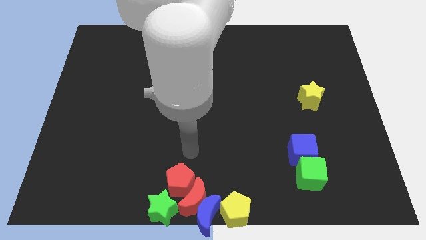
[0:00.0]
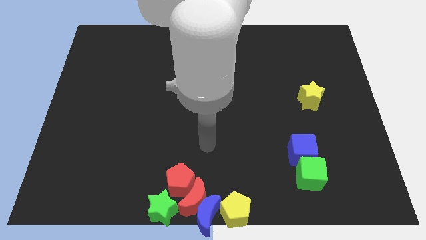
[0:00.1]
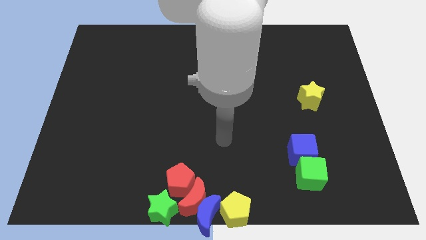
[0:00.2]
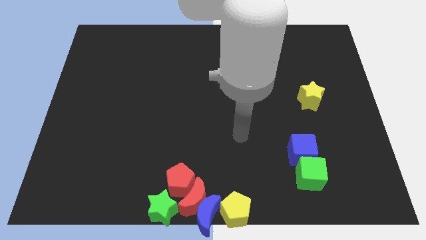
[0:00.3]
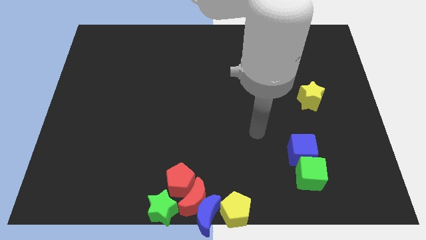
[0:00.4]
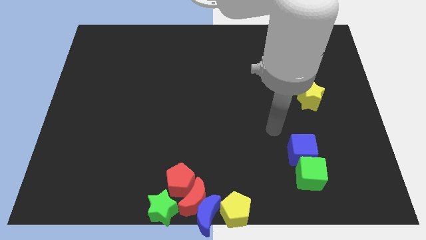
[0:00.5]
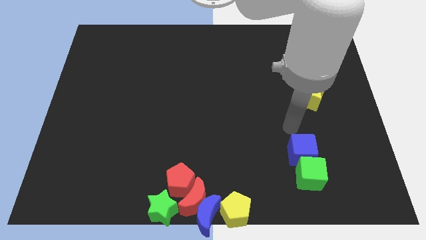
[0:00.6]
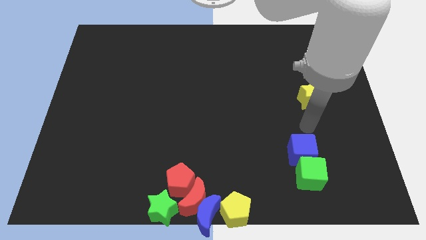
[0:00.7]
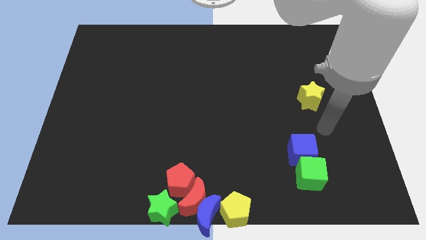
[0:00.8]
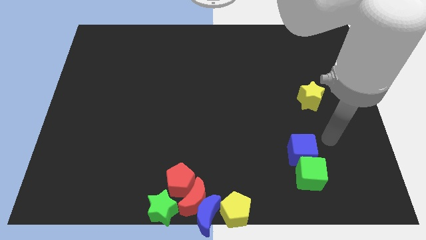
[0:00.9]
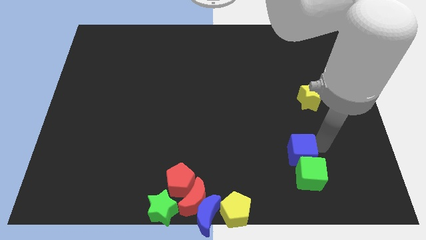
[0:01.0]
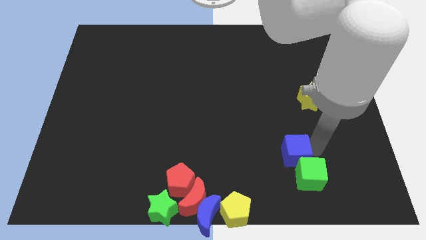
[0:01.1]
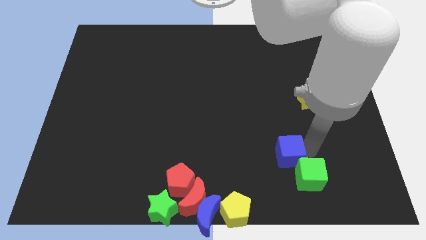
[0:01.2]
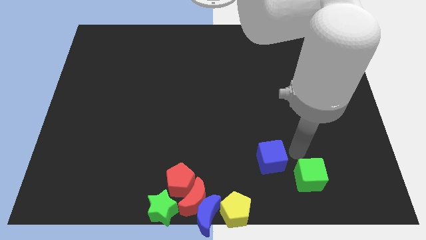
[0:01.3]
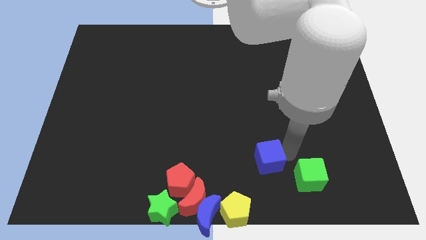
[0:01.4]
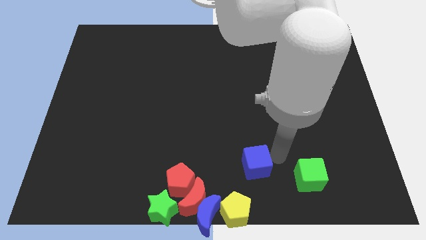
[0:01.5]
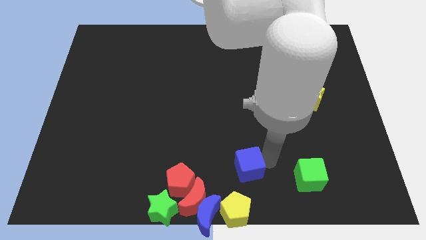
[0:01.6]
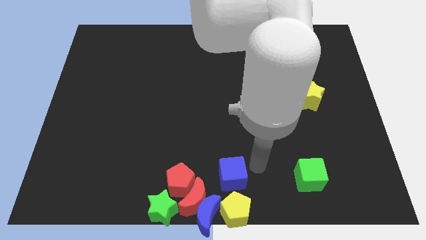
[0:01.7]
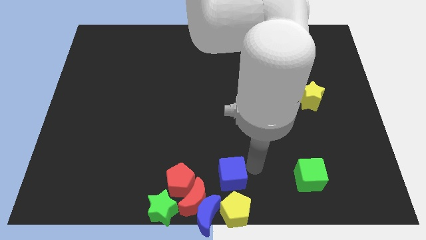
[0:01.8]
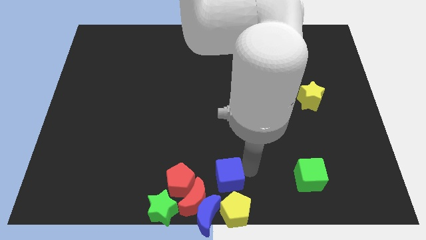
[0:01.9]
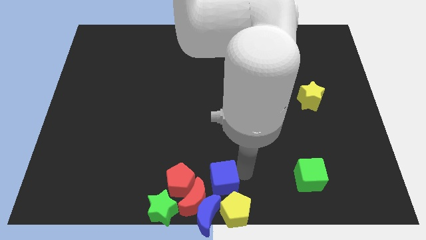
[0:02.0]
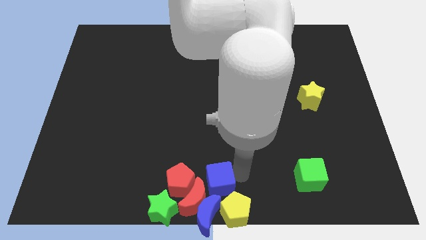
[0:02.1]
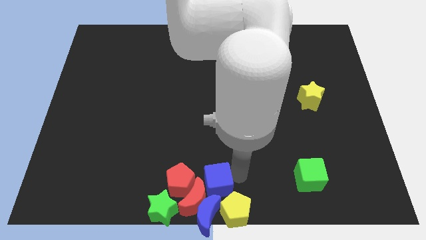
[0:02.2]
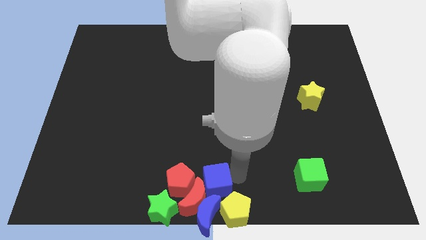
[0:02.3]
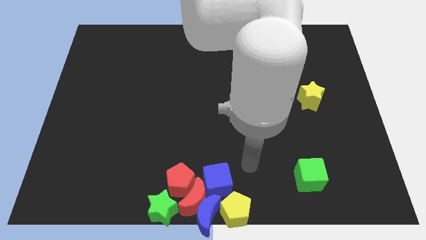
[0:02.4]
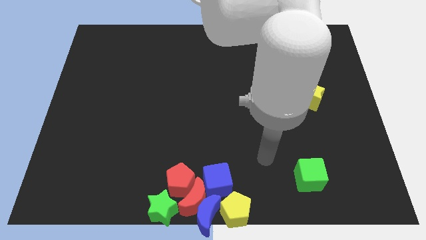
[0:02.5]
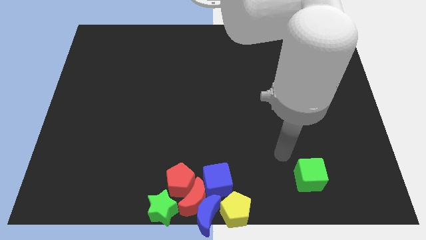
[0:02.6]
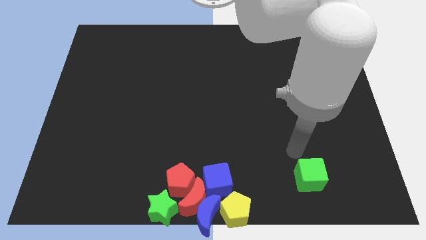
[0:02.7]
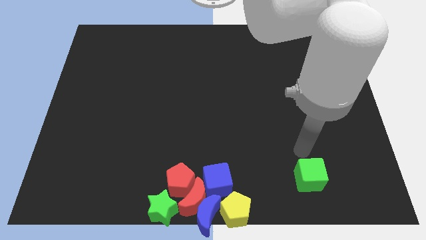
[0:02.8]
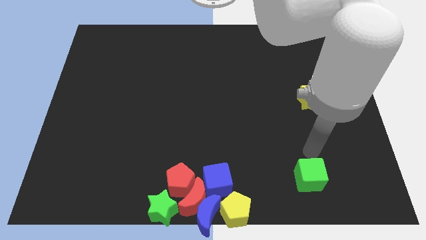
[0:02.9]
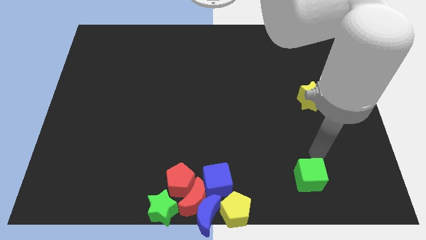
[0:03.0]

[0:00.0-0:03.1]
separate the cubes

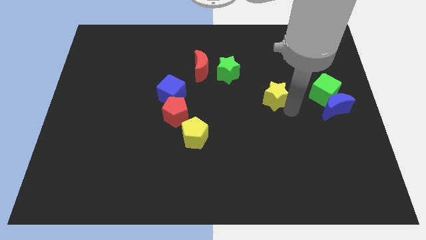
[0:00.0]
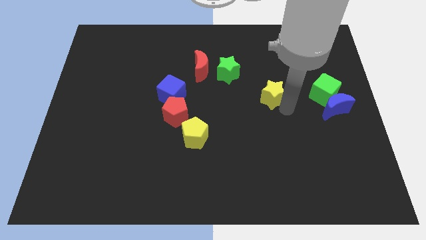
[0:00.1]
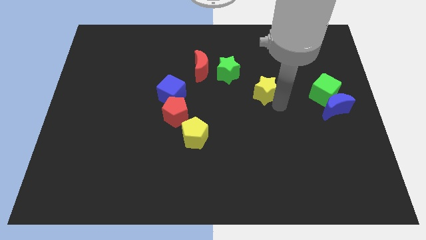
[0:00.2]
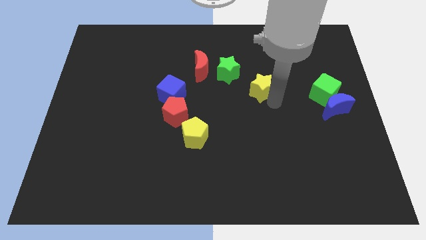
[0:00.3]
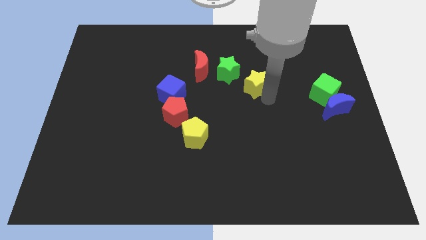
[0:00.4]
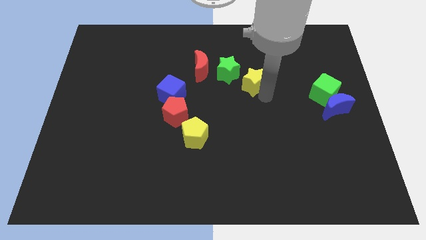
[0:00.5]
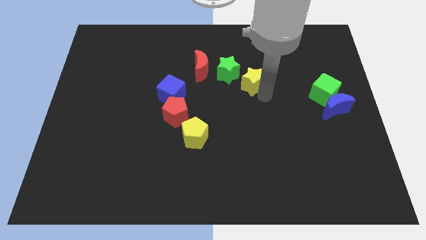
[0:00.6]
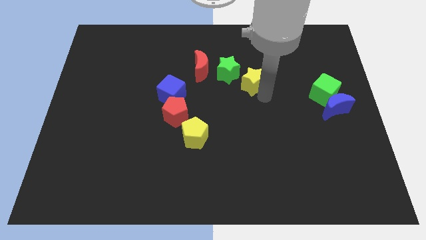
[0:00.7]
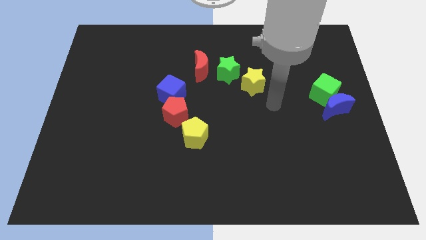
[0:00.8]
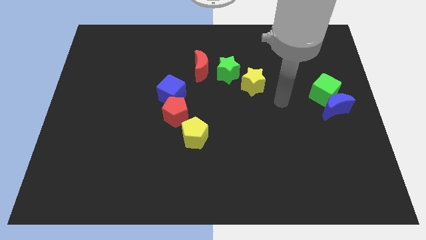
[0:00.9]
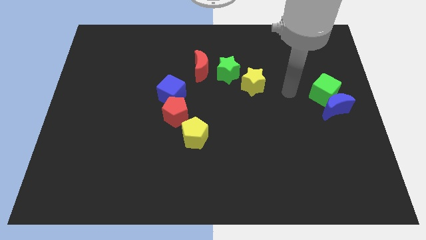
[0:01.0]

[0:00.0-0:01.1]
push the yellow star close to the green star

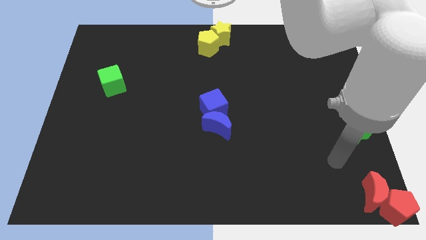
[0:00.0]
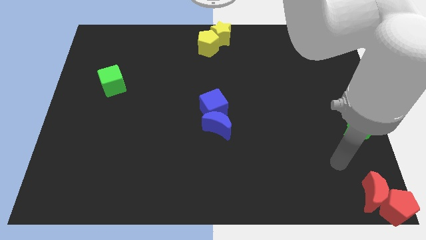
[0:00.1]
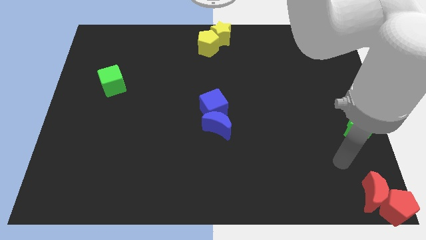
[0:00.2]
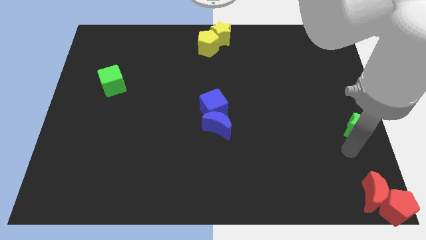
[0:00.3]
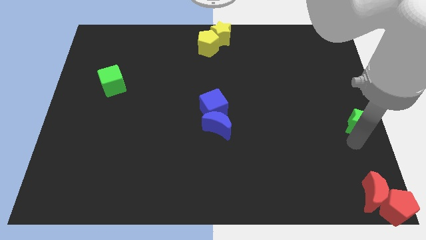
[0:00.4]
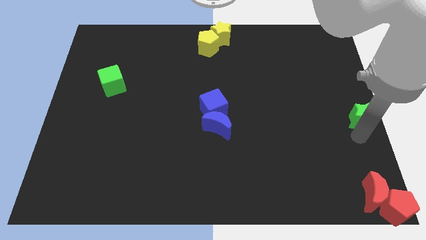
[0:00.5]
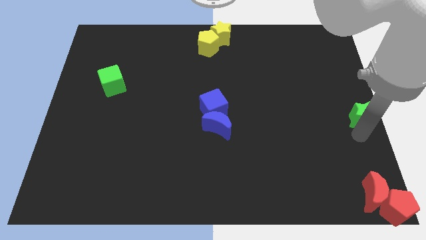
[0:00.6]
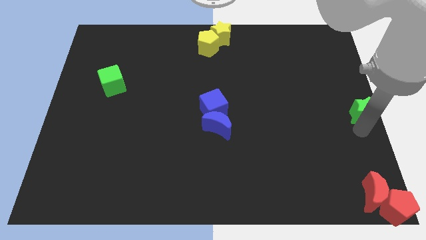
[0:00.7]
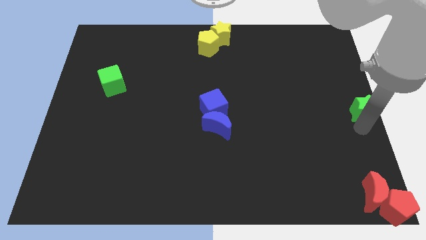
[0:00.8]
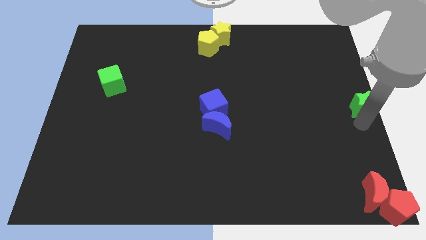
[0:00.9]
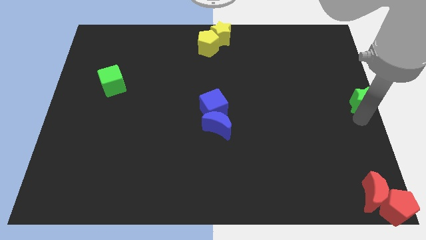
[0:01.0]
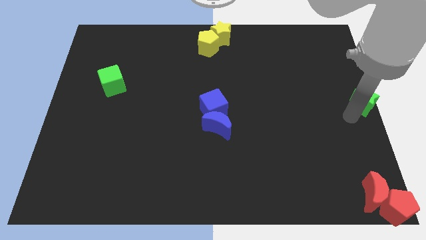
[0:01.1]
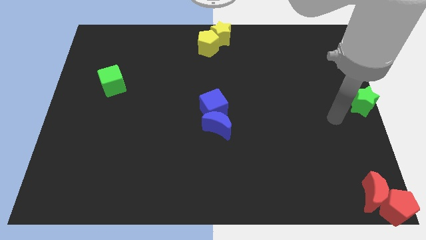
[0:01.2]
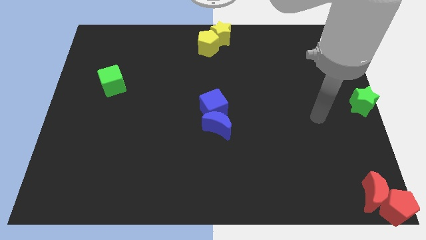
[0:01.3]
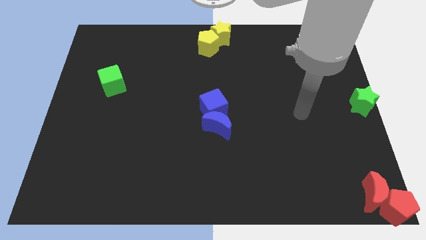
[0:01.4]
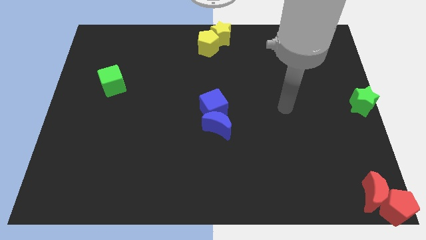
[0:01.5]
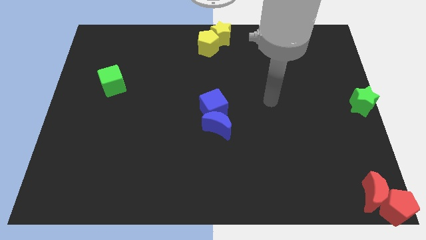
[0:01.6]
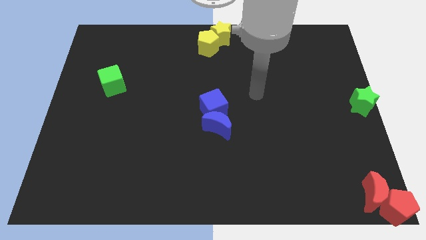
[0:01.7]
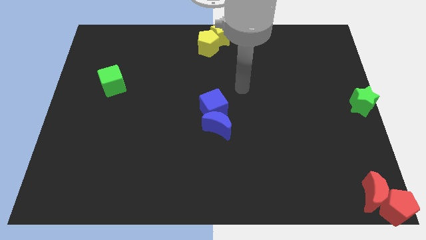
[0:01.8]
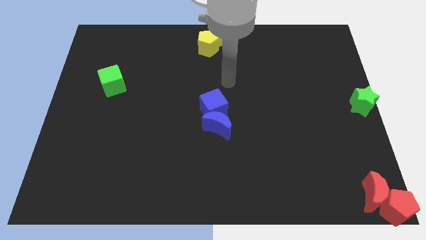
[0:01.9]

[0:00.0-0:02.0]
place the green star to the right center of the board

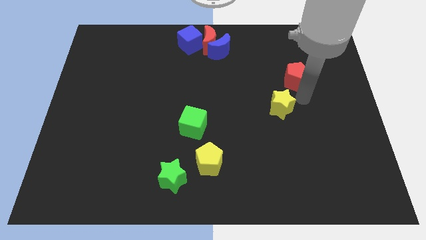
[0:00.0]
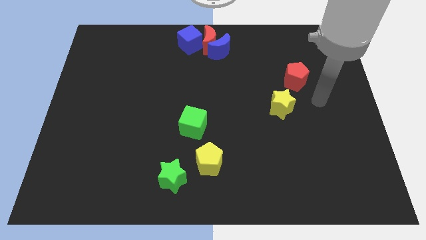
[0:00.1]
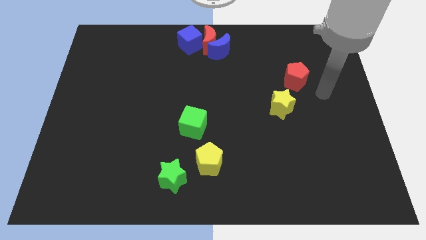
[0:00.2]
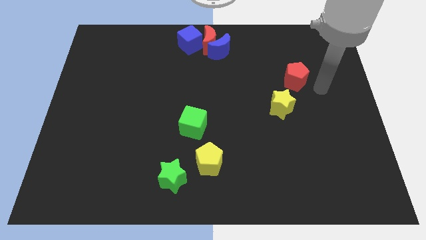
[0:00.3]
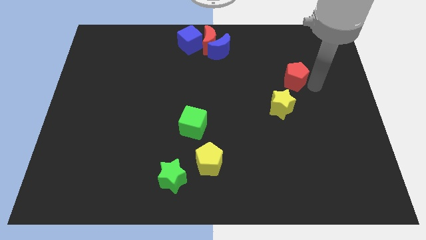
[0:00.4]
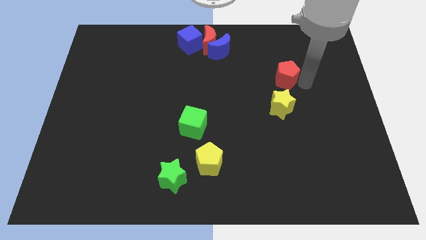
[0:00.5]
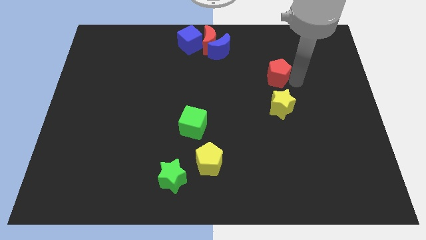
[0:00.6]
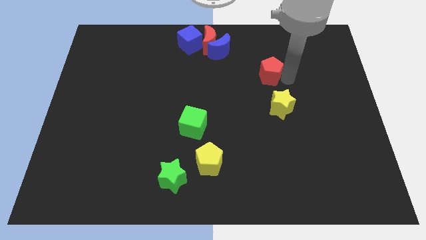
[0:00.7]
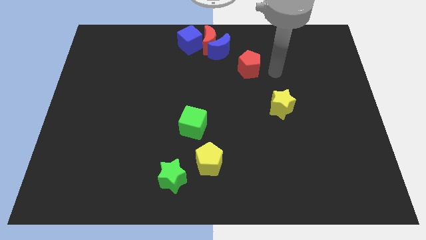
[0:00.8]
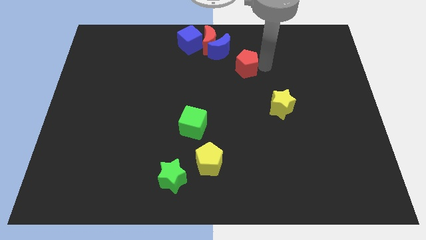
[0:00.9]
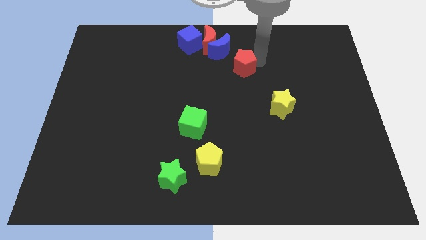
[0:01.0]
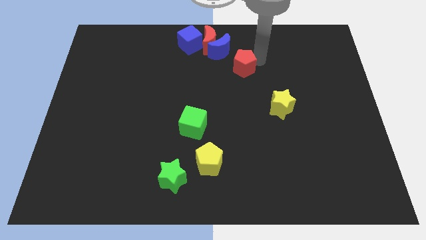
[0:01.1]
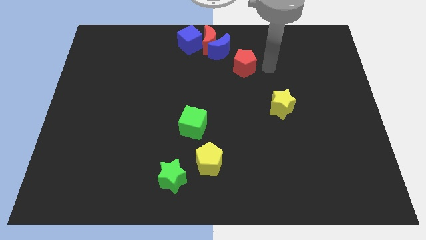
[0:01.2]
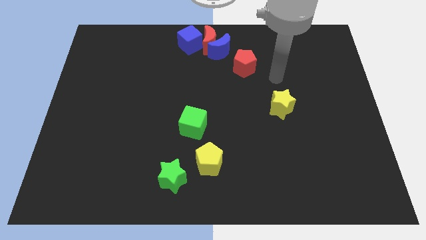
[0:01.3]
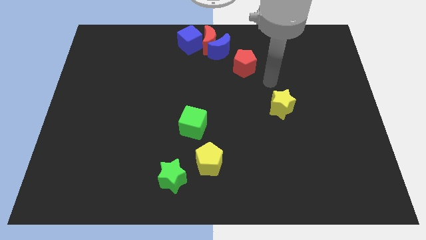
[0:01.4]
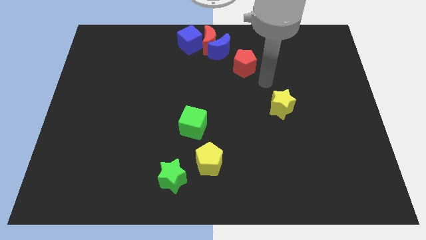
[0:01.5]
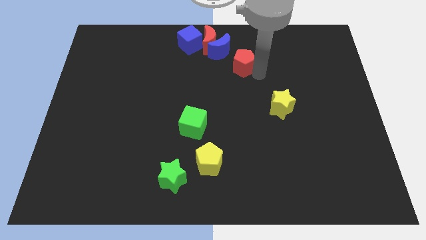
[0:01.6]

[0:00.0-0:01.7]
move red pentagon apart from the yellow star

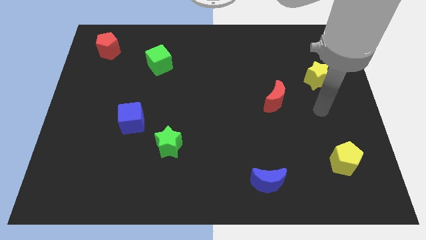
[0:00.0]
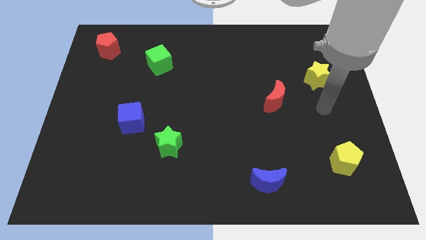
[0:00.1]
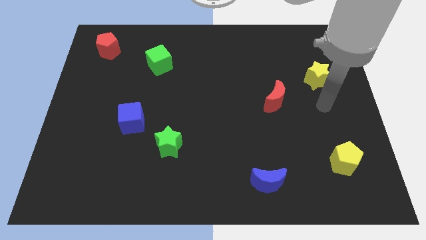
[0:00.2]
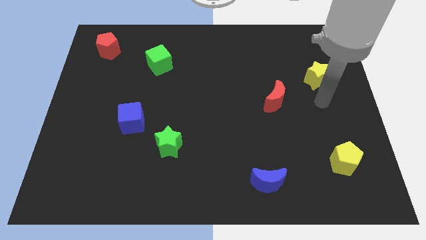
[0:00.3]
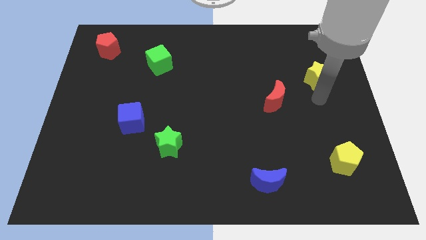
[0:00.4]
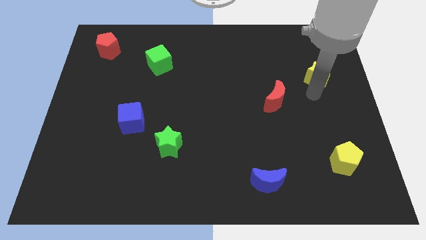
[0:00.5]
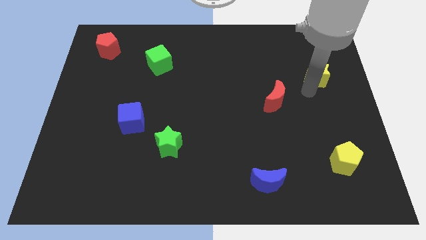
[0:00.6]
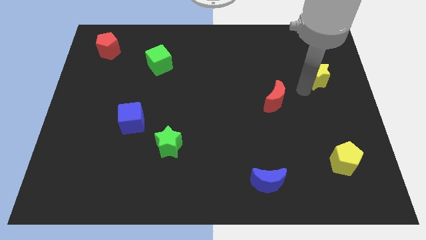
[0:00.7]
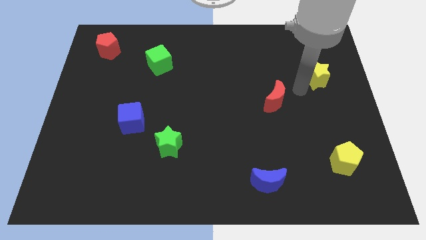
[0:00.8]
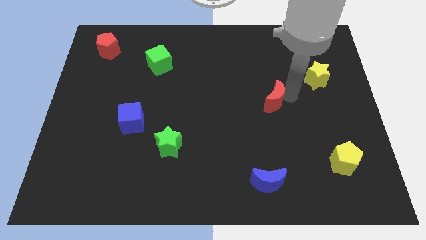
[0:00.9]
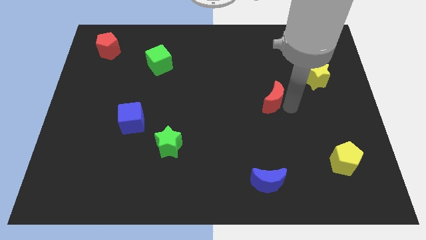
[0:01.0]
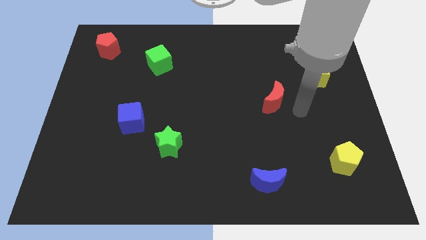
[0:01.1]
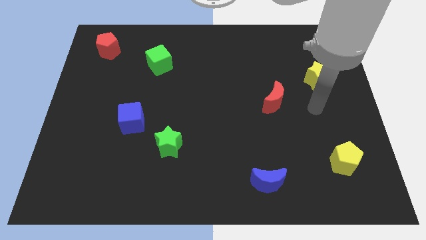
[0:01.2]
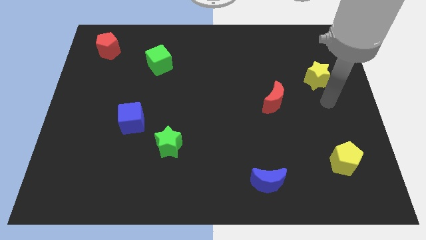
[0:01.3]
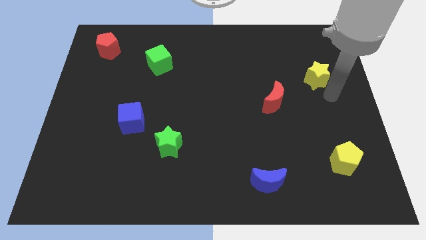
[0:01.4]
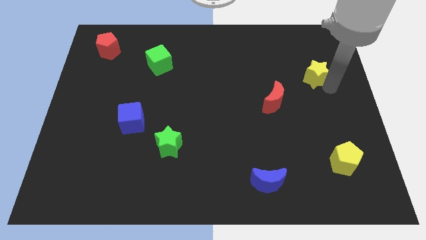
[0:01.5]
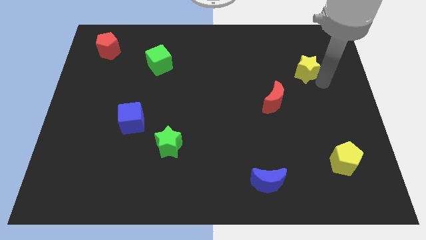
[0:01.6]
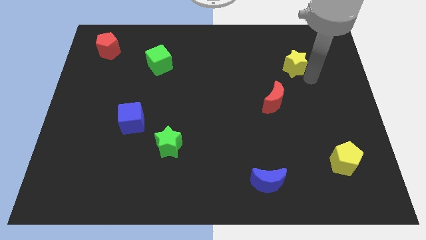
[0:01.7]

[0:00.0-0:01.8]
push the yellow star to the top
